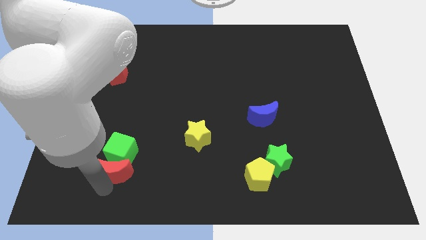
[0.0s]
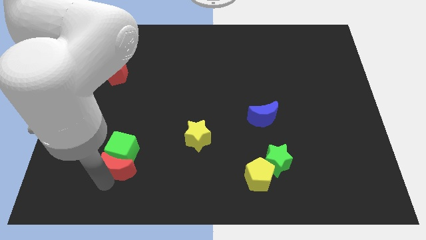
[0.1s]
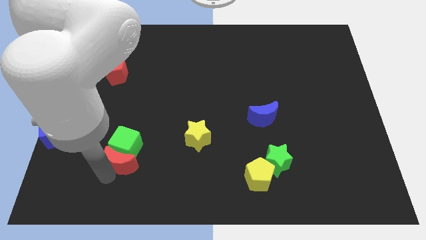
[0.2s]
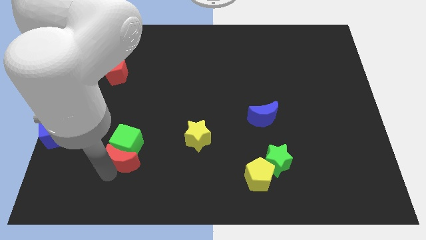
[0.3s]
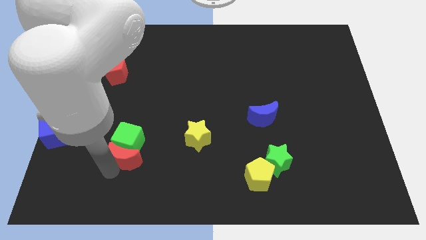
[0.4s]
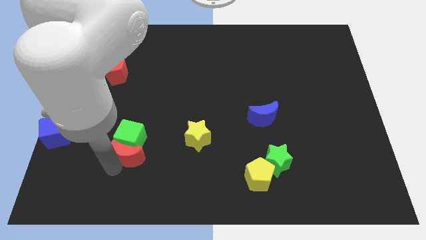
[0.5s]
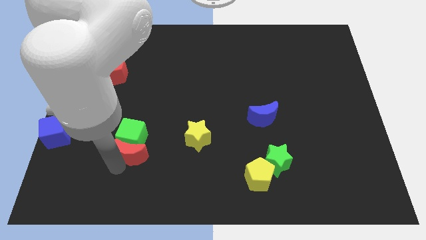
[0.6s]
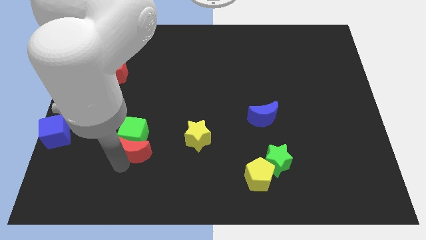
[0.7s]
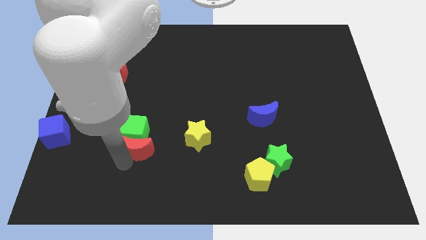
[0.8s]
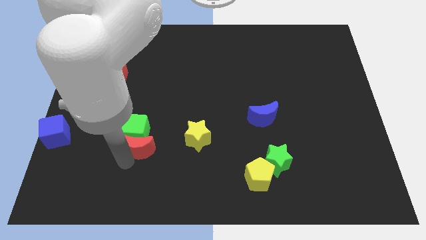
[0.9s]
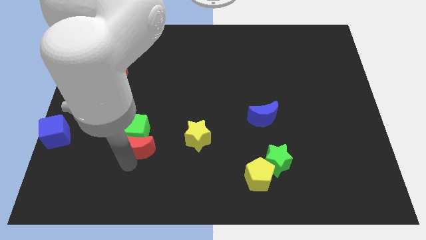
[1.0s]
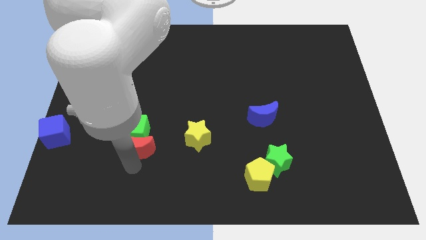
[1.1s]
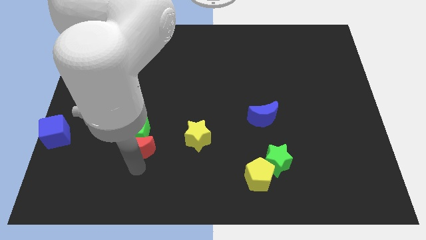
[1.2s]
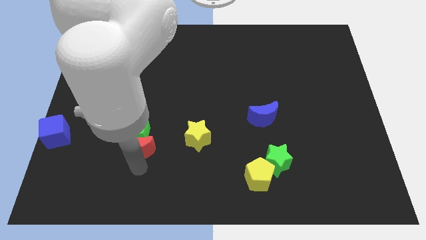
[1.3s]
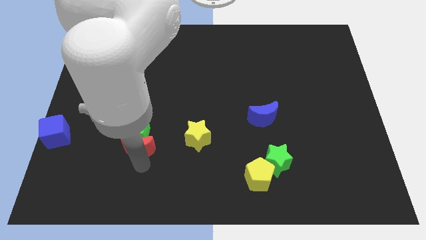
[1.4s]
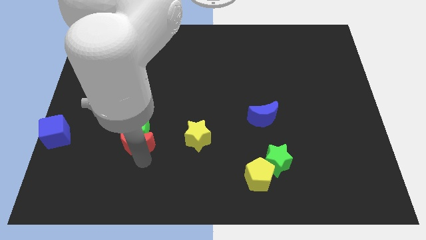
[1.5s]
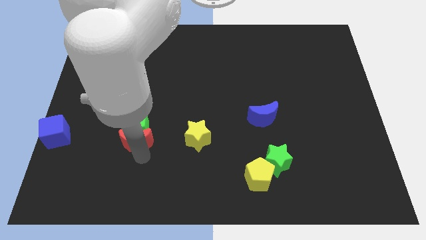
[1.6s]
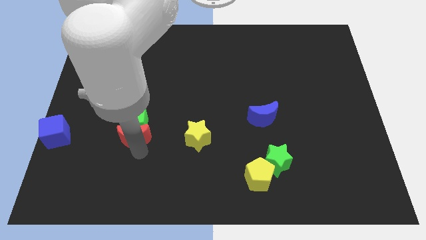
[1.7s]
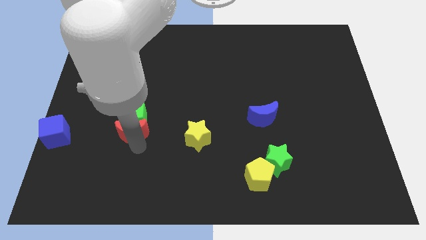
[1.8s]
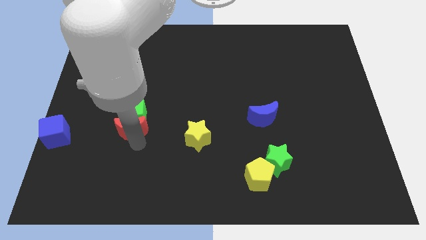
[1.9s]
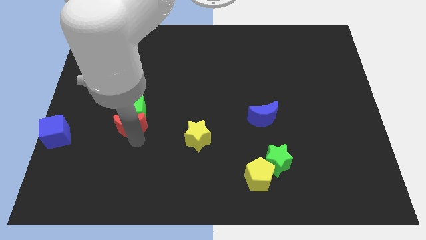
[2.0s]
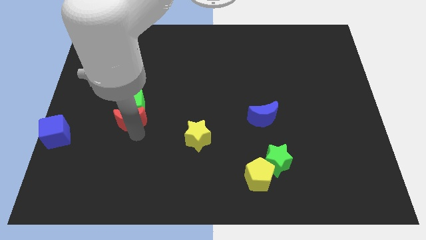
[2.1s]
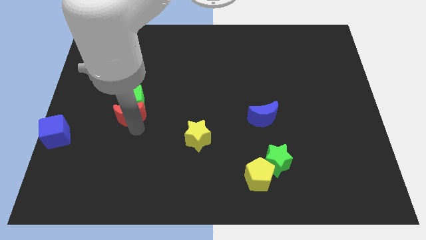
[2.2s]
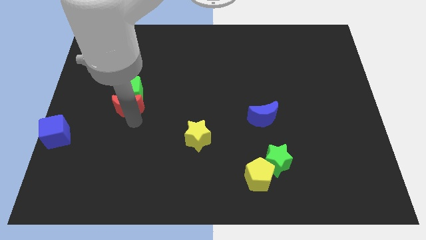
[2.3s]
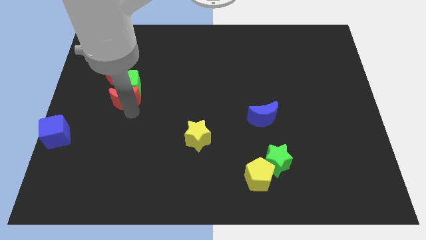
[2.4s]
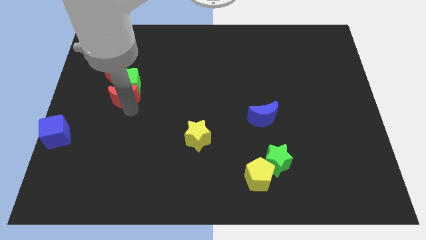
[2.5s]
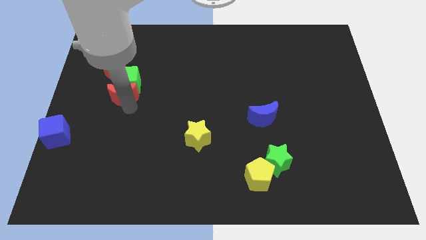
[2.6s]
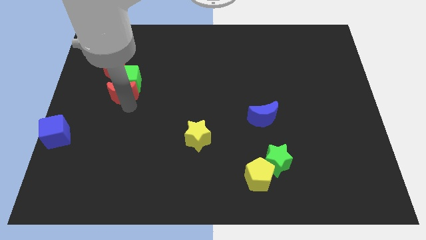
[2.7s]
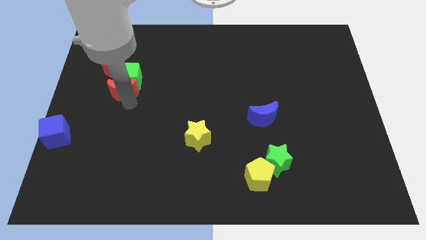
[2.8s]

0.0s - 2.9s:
move the red crescent along with the green cube towards the top

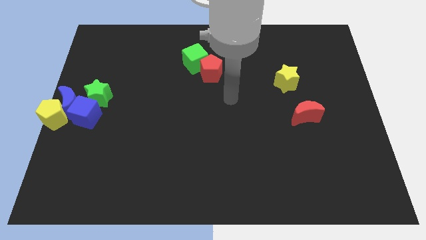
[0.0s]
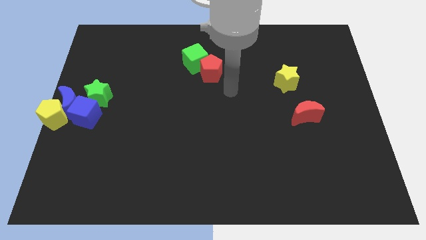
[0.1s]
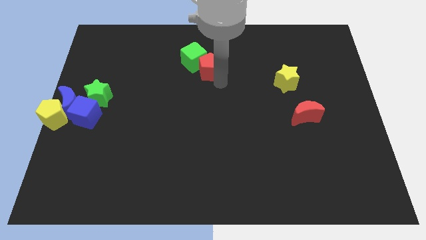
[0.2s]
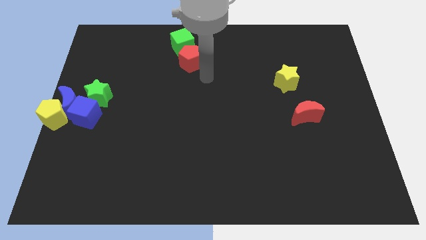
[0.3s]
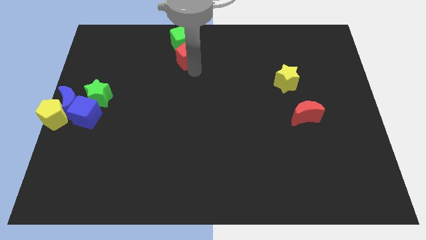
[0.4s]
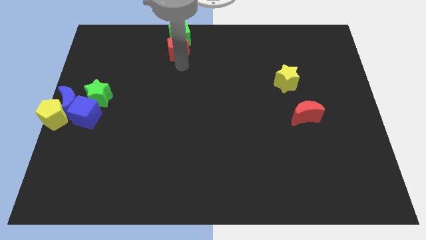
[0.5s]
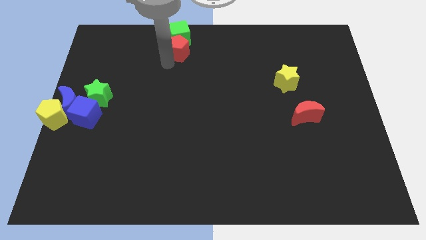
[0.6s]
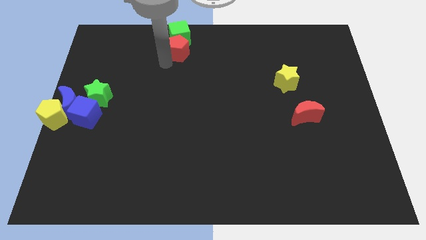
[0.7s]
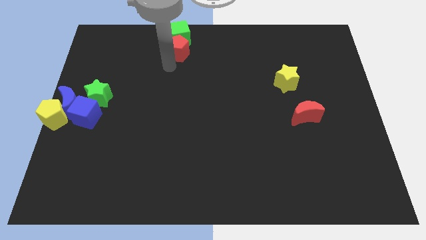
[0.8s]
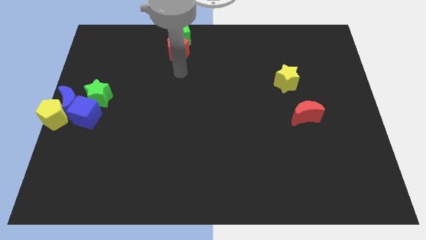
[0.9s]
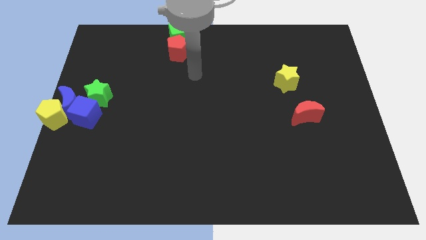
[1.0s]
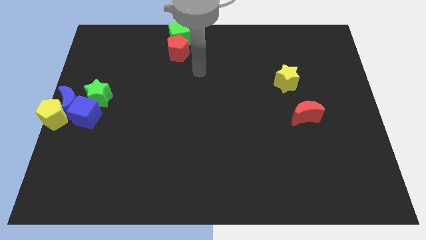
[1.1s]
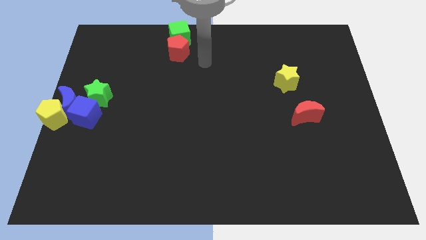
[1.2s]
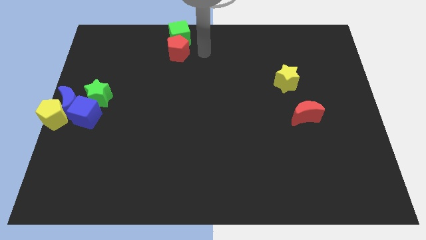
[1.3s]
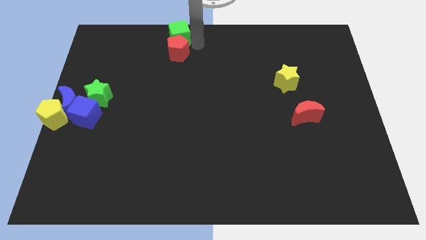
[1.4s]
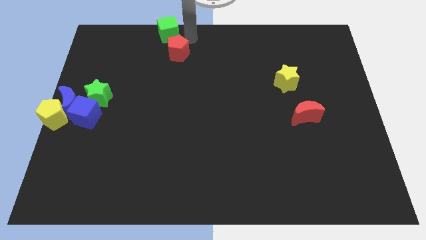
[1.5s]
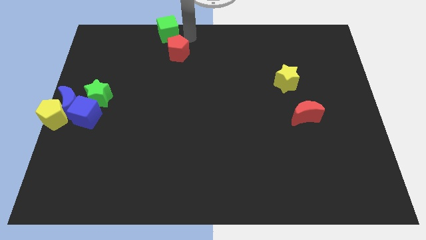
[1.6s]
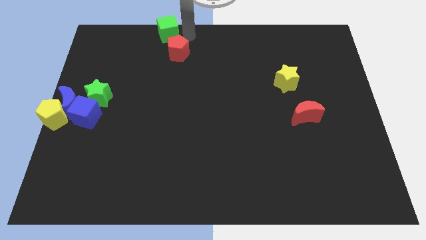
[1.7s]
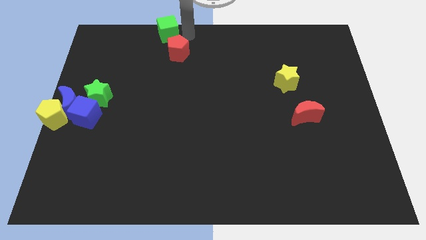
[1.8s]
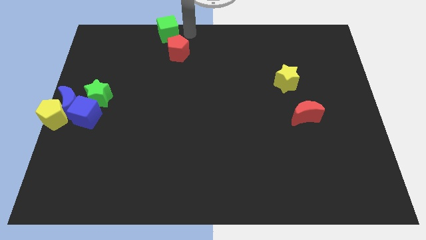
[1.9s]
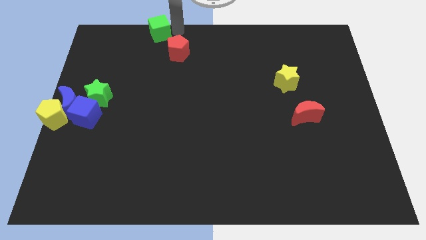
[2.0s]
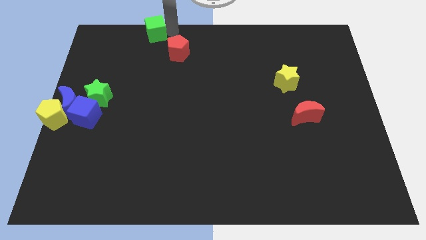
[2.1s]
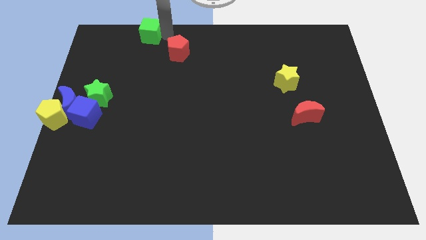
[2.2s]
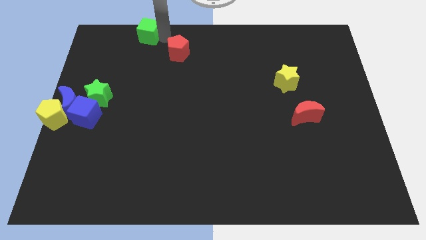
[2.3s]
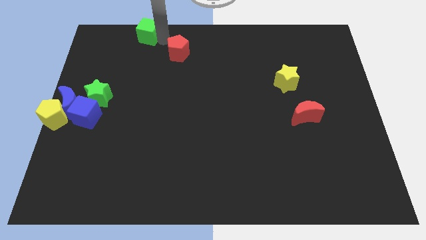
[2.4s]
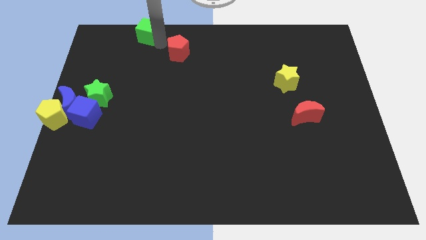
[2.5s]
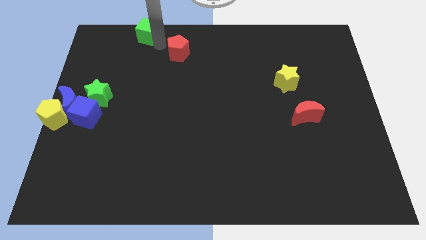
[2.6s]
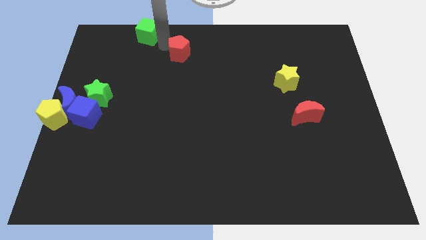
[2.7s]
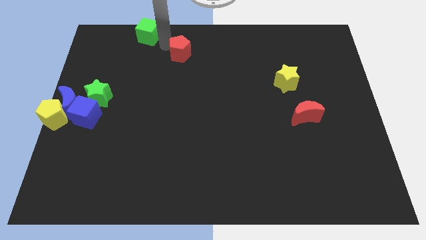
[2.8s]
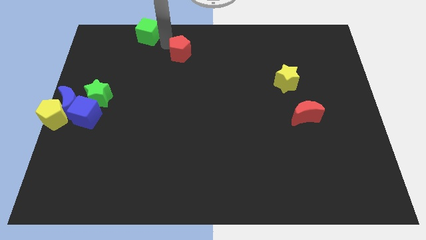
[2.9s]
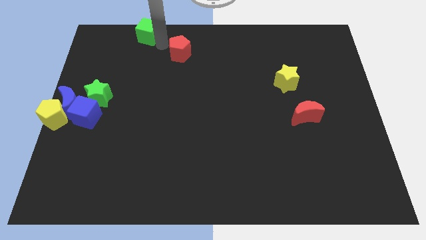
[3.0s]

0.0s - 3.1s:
push the green cube with red pentagon slightly to the top

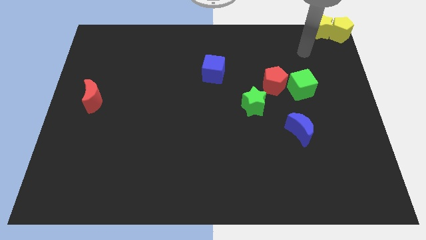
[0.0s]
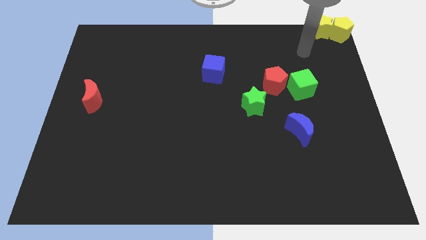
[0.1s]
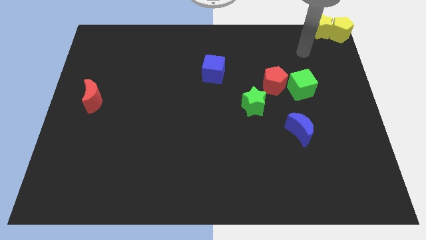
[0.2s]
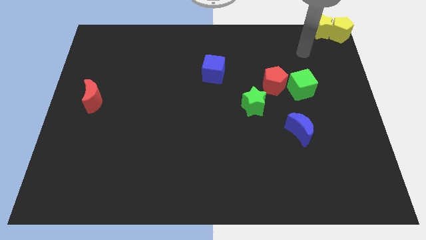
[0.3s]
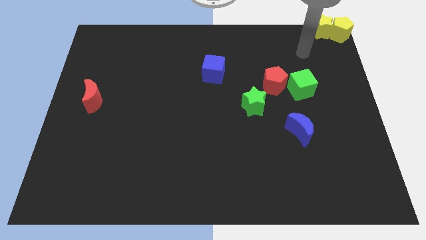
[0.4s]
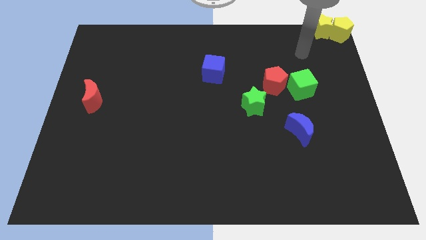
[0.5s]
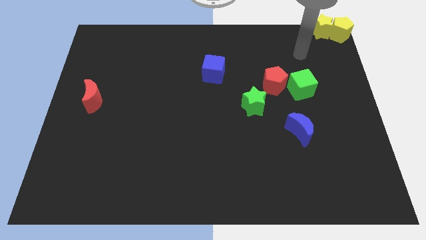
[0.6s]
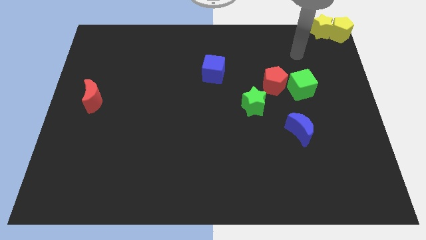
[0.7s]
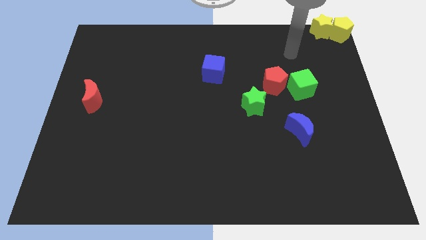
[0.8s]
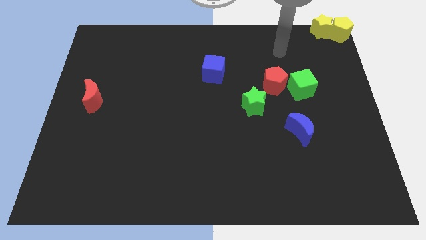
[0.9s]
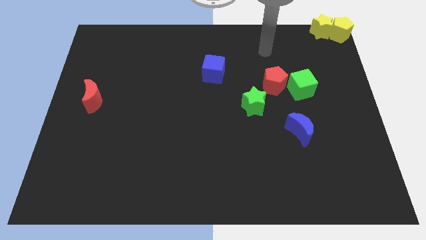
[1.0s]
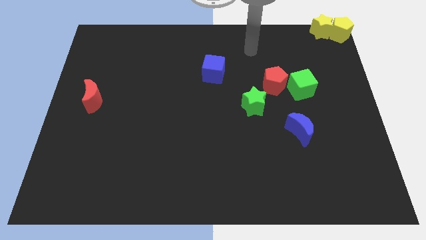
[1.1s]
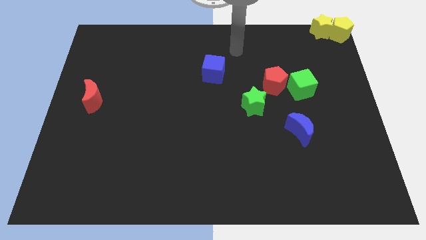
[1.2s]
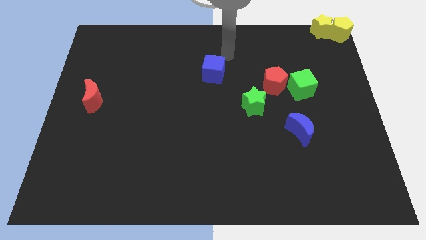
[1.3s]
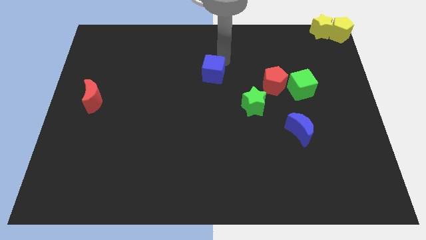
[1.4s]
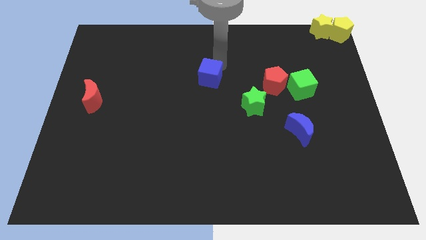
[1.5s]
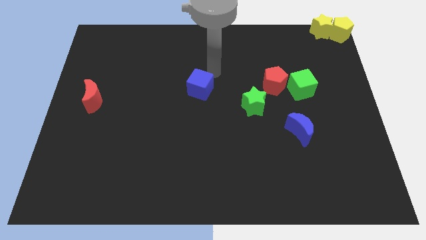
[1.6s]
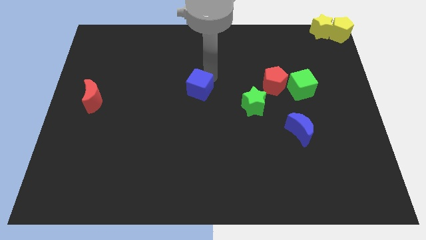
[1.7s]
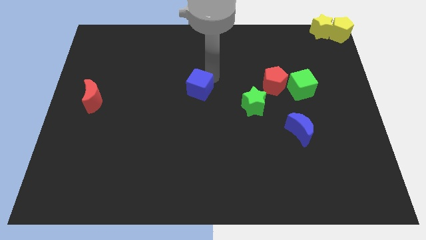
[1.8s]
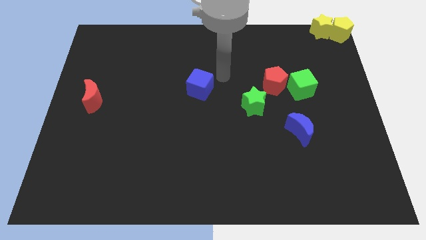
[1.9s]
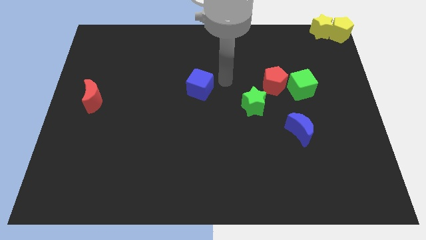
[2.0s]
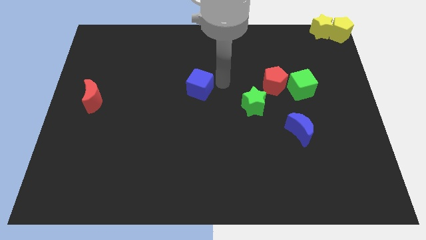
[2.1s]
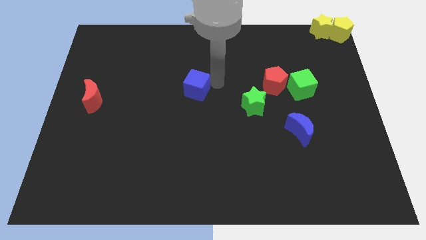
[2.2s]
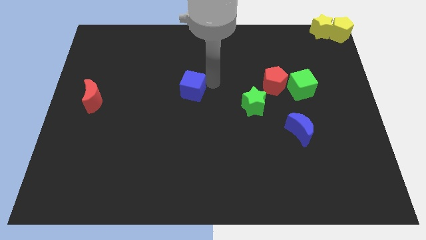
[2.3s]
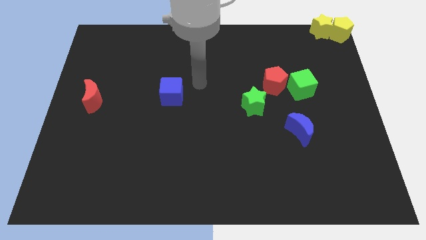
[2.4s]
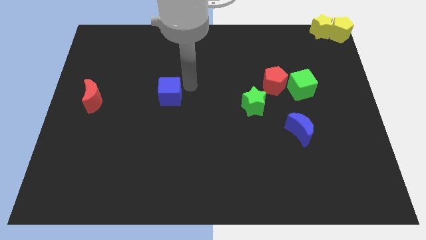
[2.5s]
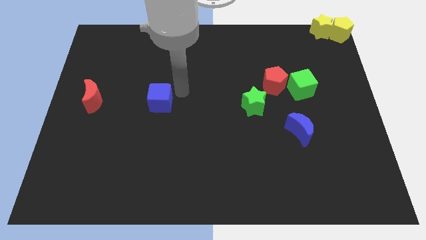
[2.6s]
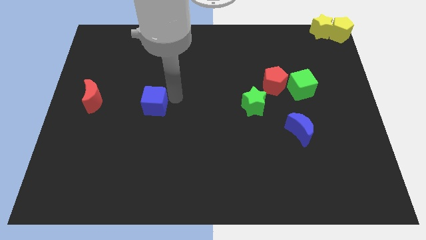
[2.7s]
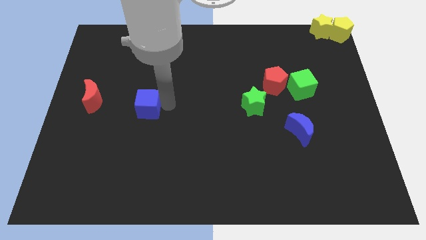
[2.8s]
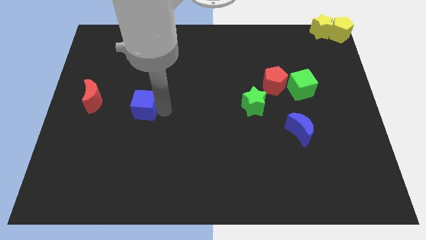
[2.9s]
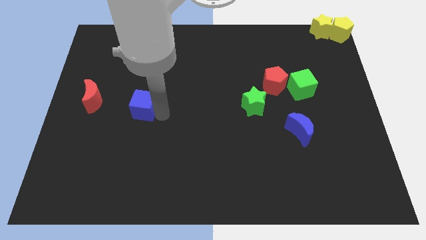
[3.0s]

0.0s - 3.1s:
slide the blue cube towards the red moon

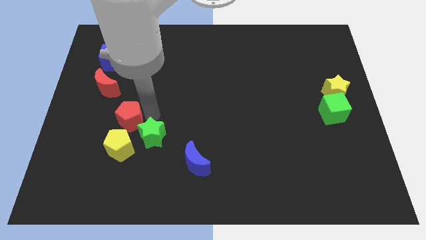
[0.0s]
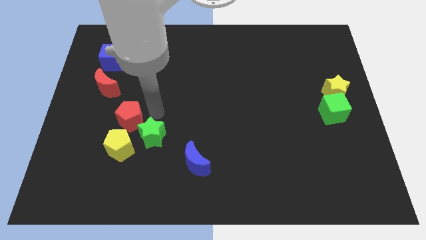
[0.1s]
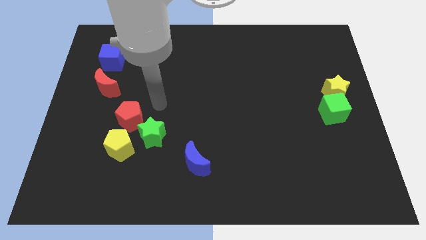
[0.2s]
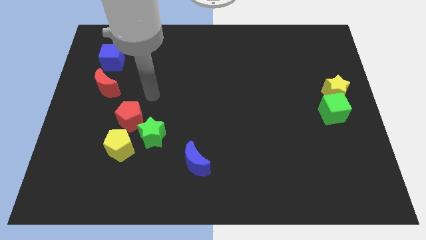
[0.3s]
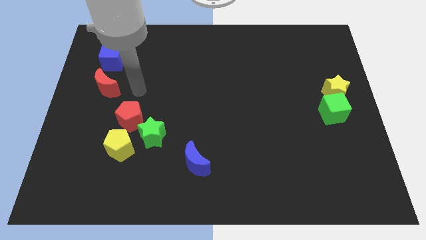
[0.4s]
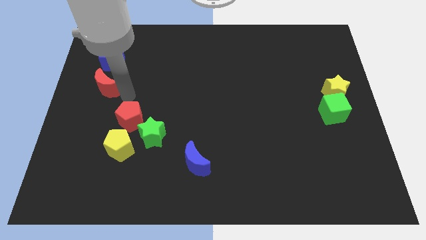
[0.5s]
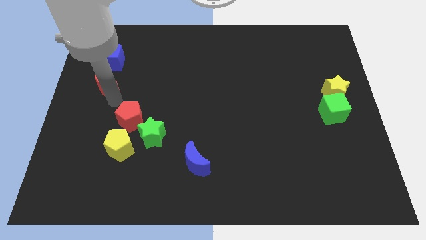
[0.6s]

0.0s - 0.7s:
place your arm in between the red blocks
